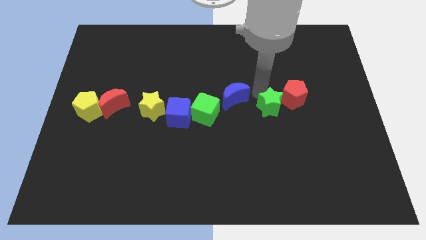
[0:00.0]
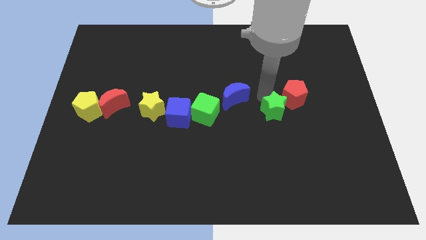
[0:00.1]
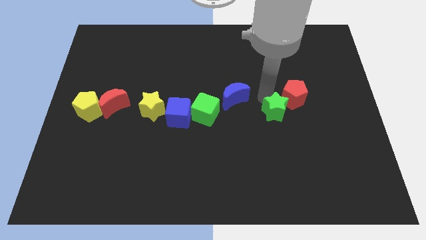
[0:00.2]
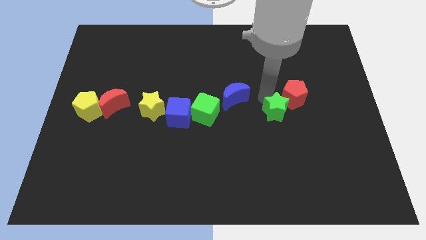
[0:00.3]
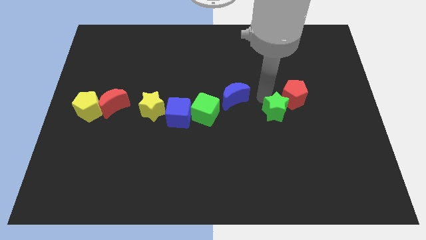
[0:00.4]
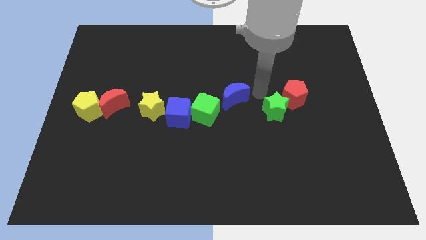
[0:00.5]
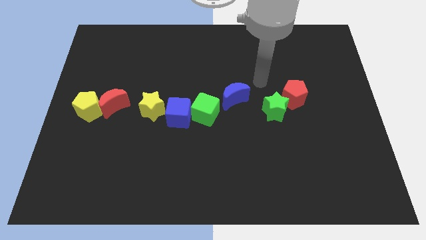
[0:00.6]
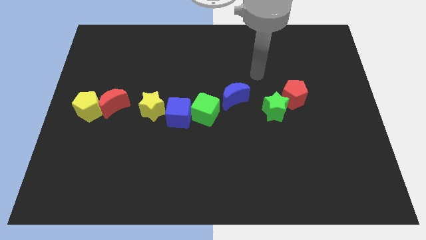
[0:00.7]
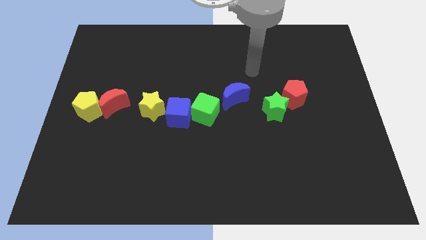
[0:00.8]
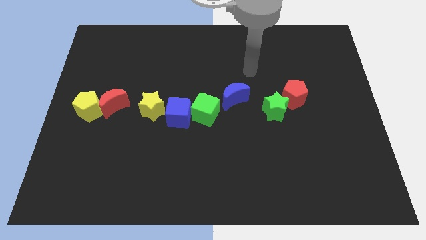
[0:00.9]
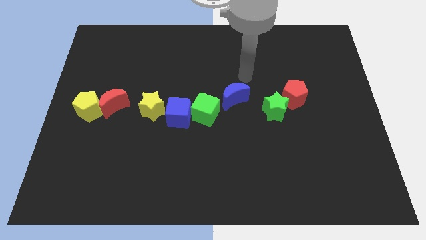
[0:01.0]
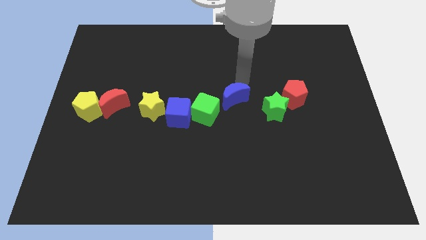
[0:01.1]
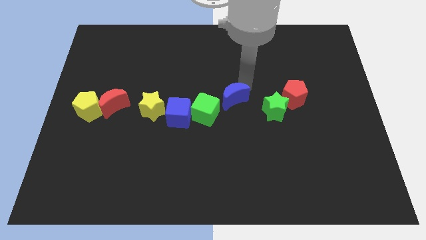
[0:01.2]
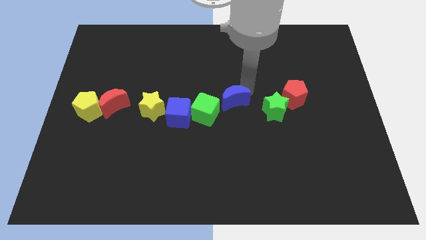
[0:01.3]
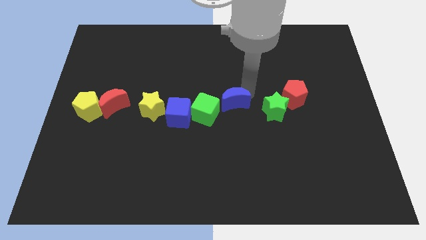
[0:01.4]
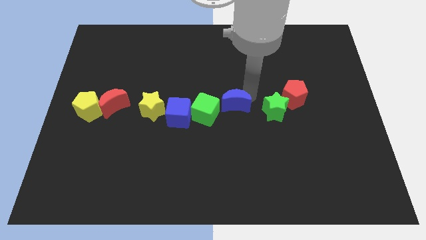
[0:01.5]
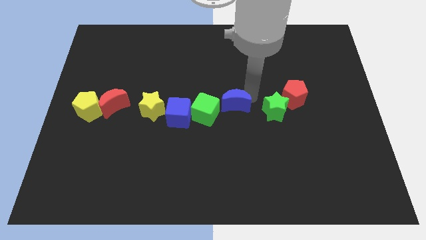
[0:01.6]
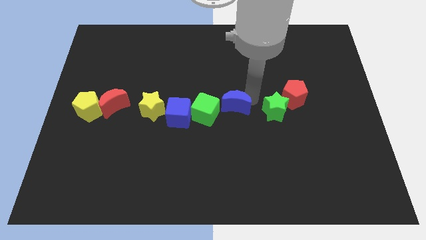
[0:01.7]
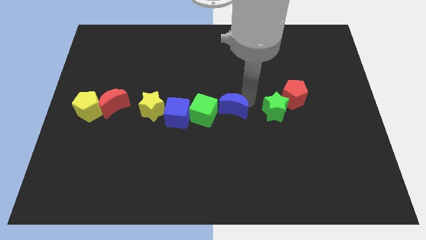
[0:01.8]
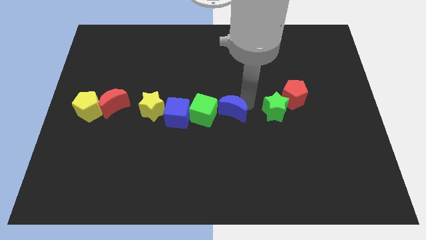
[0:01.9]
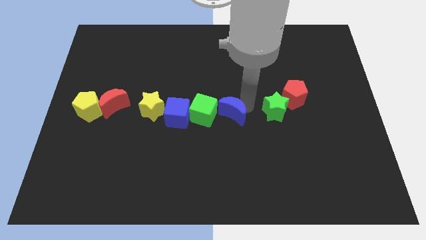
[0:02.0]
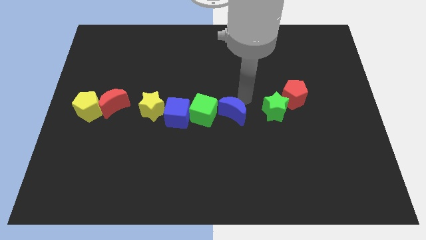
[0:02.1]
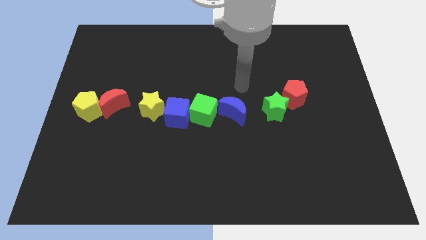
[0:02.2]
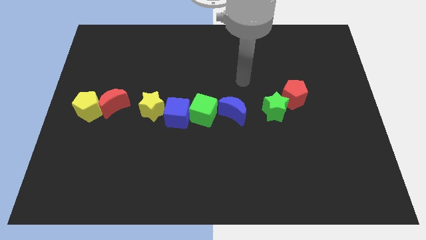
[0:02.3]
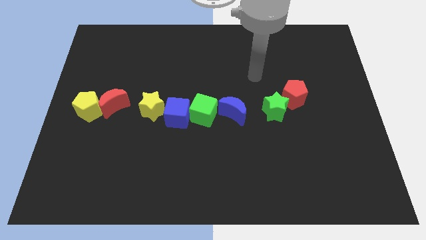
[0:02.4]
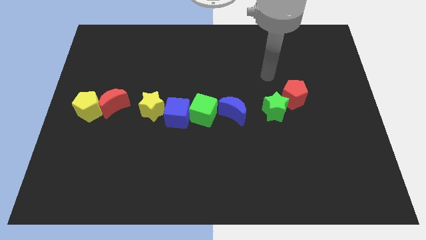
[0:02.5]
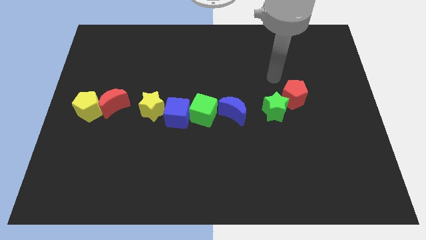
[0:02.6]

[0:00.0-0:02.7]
slightly push the blue moon in between green star and green cube

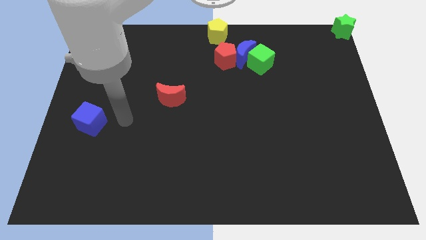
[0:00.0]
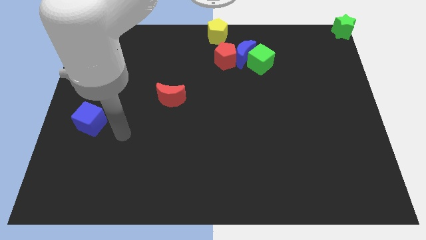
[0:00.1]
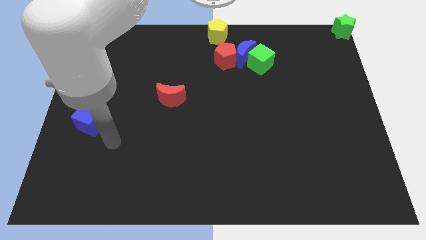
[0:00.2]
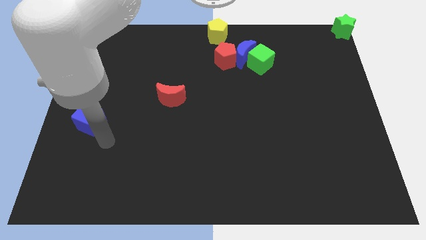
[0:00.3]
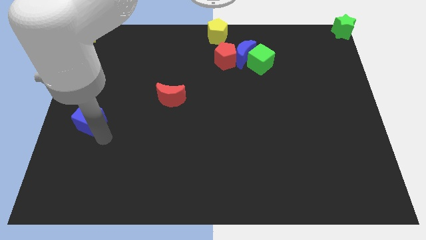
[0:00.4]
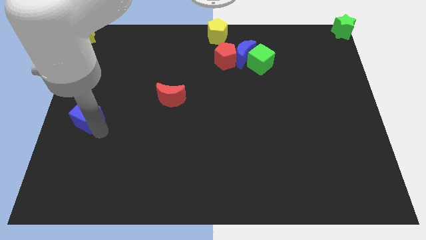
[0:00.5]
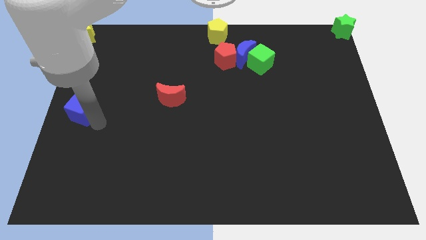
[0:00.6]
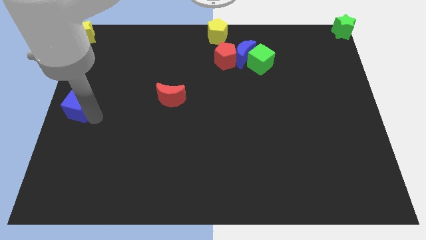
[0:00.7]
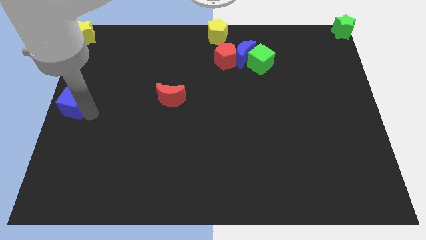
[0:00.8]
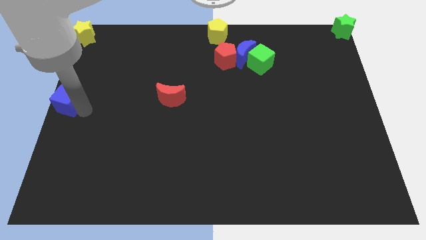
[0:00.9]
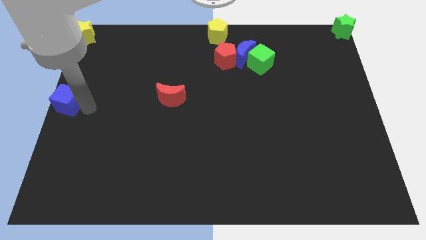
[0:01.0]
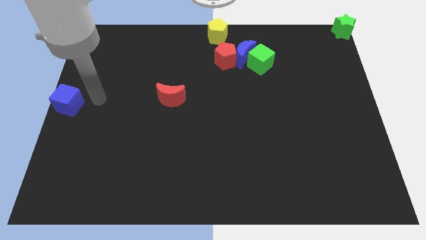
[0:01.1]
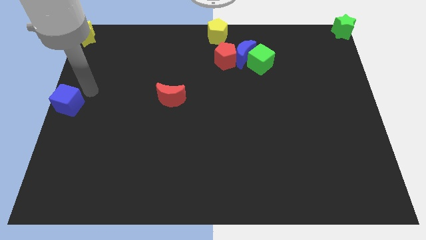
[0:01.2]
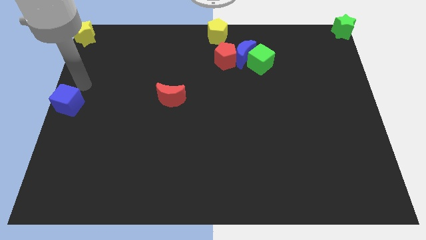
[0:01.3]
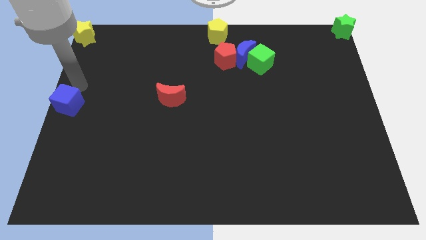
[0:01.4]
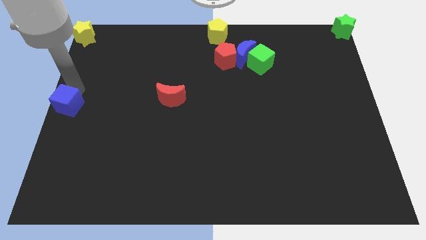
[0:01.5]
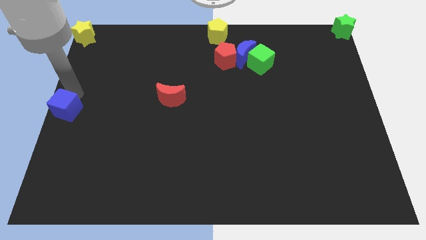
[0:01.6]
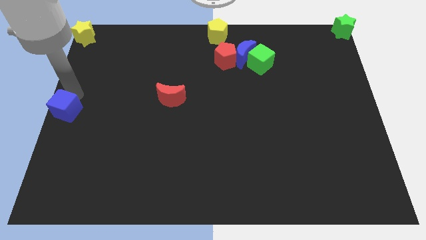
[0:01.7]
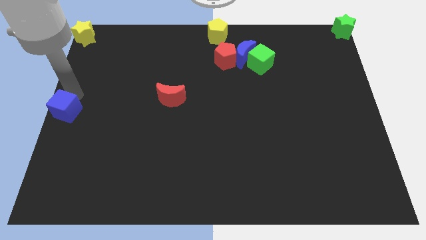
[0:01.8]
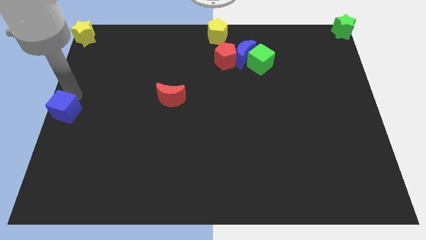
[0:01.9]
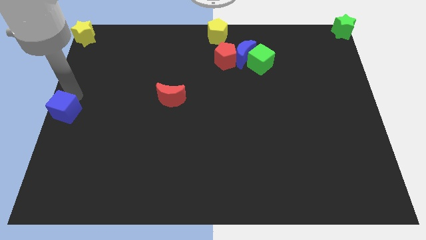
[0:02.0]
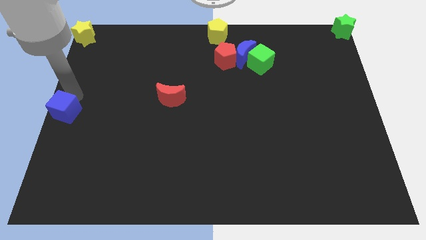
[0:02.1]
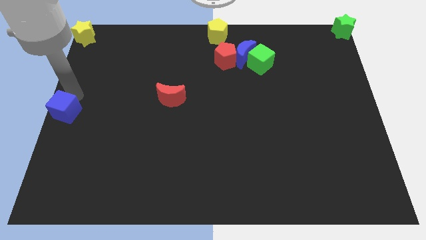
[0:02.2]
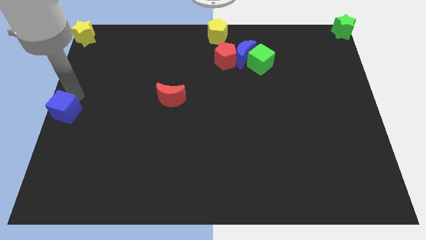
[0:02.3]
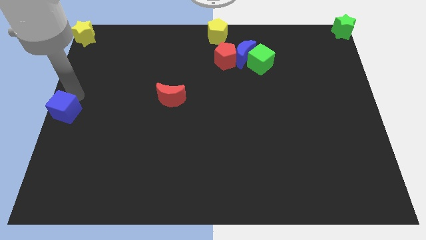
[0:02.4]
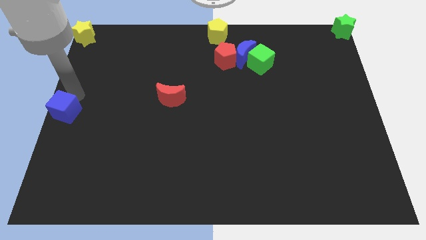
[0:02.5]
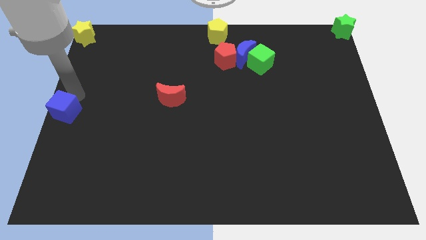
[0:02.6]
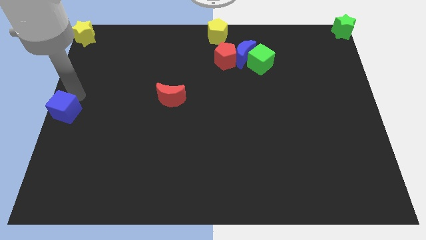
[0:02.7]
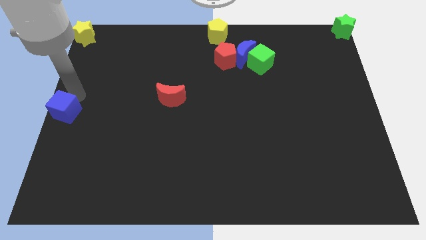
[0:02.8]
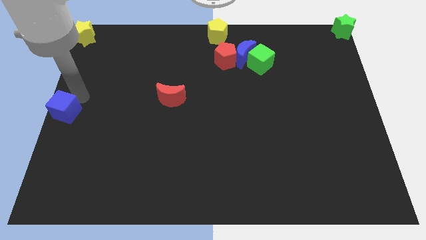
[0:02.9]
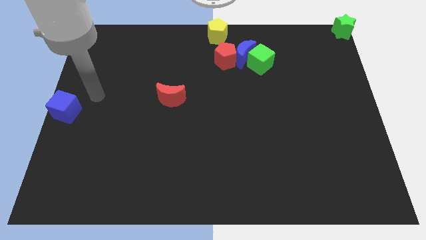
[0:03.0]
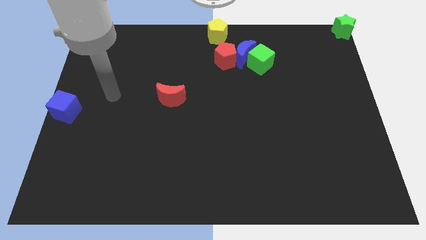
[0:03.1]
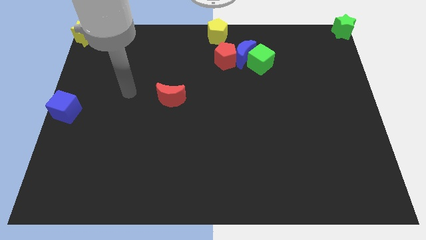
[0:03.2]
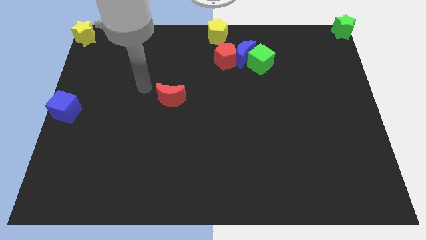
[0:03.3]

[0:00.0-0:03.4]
place the blue cube at the center left of the board

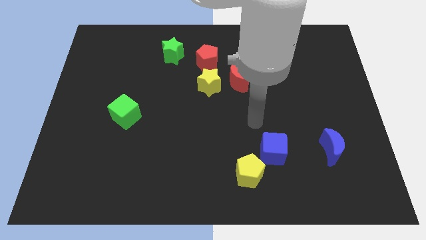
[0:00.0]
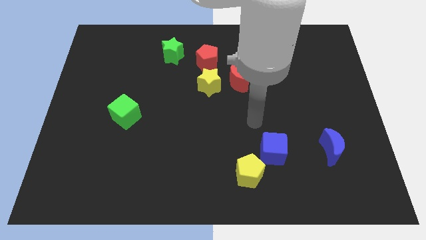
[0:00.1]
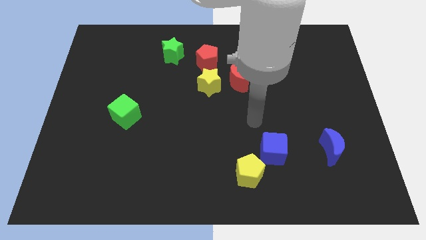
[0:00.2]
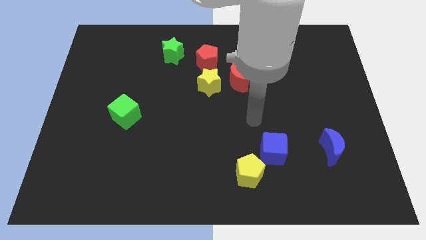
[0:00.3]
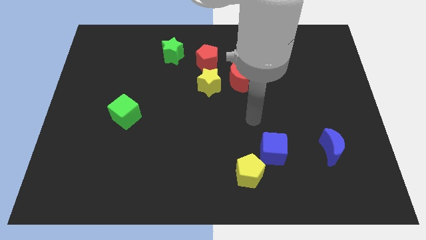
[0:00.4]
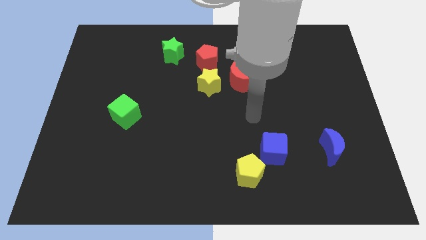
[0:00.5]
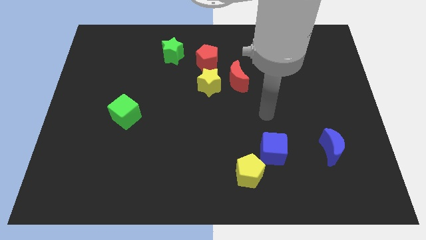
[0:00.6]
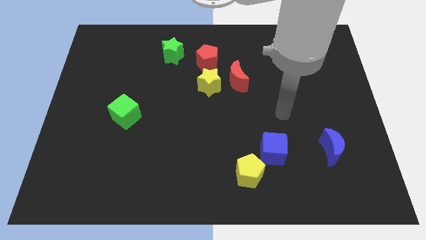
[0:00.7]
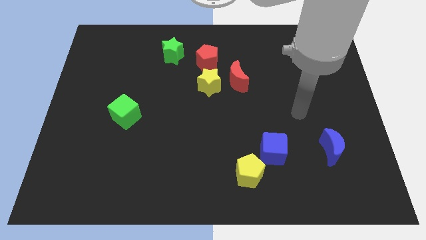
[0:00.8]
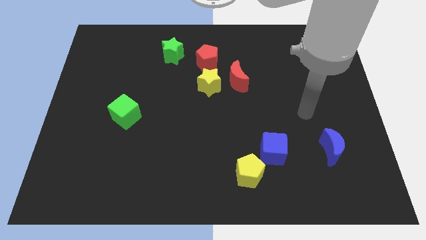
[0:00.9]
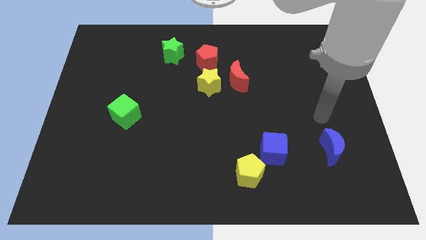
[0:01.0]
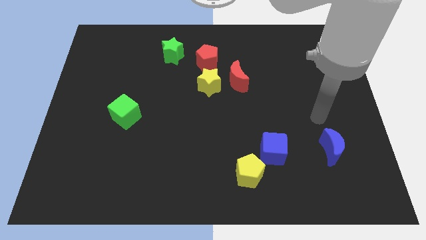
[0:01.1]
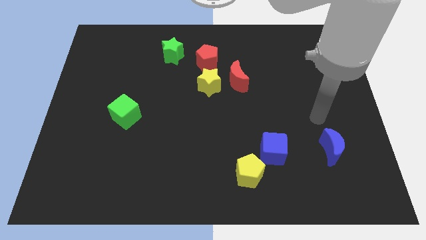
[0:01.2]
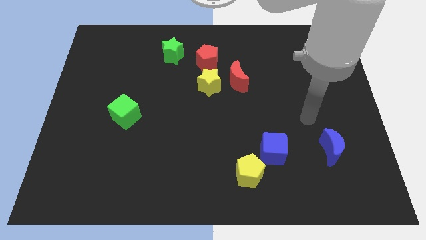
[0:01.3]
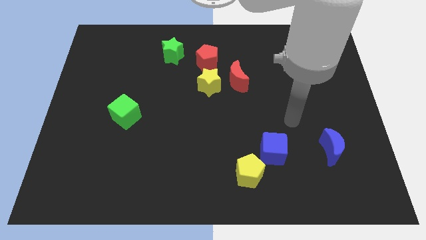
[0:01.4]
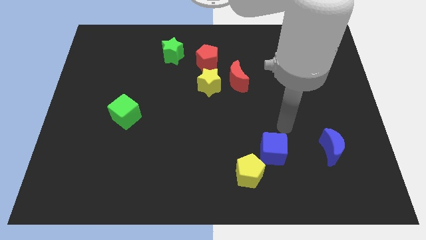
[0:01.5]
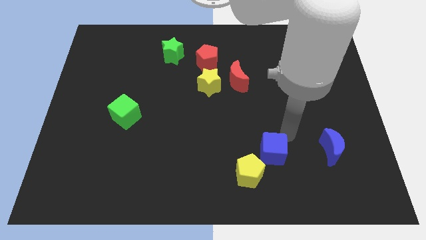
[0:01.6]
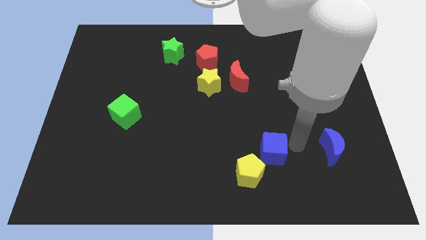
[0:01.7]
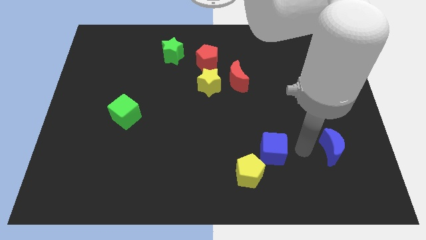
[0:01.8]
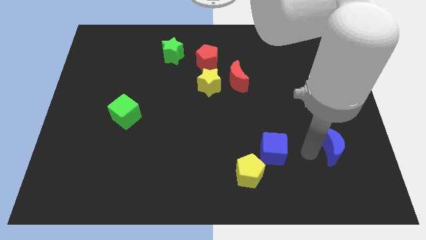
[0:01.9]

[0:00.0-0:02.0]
put your hand between the blue moon and blue cube

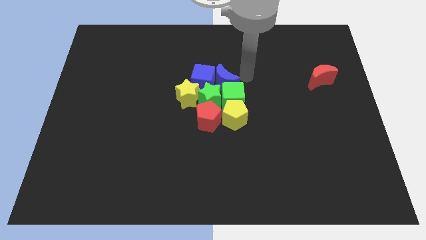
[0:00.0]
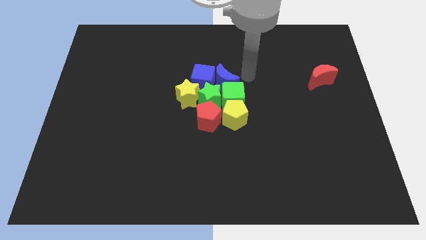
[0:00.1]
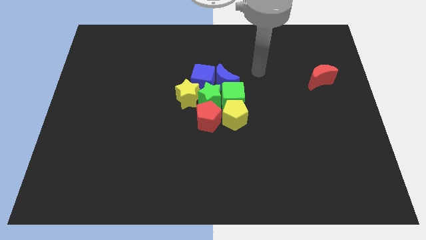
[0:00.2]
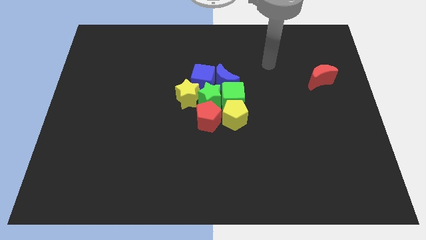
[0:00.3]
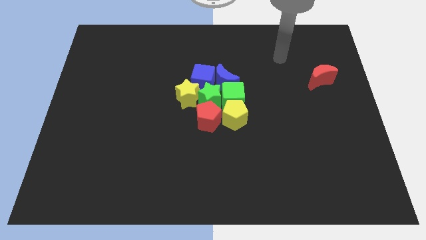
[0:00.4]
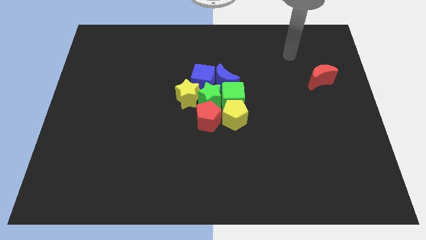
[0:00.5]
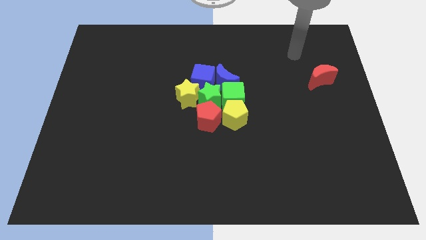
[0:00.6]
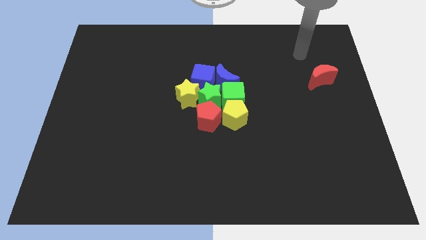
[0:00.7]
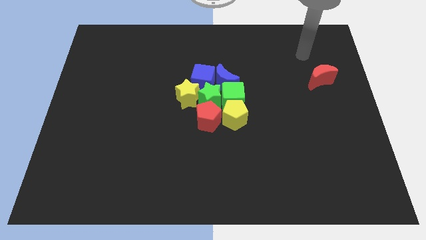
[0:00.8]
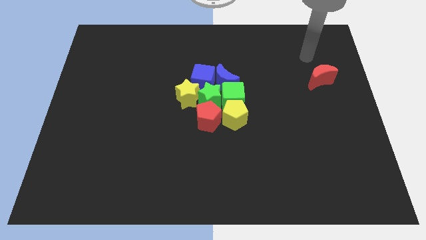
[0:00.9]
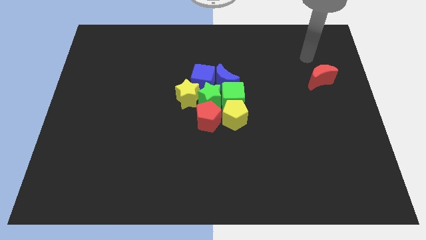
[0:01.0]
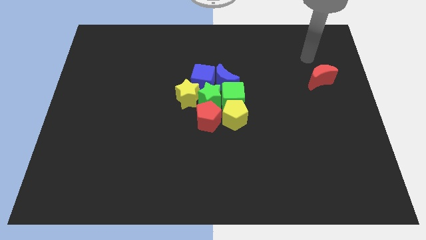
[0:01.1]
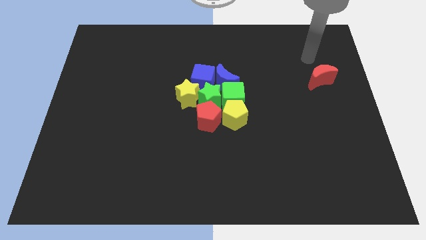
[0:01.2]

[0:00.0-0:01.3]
move your arm away from blue moon
